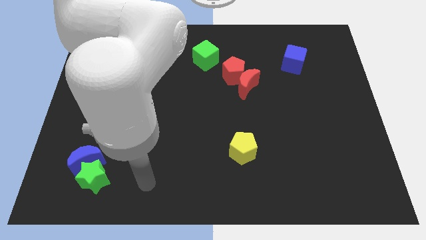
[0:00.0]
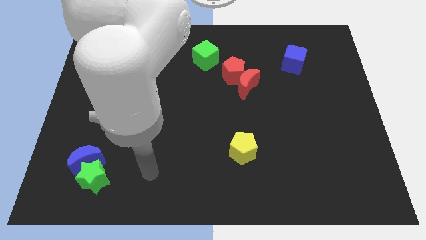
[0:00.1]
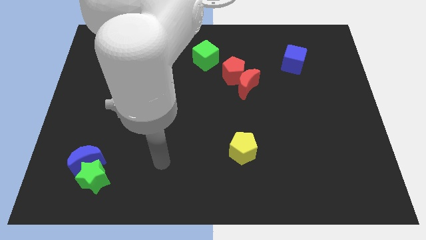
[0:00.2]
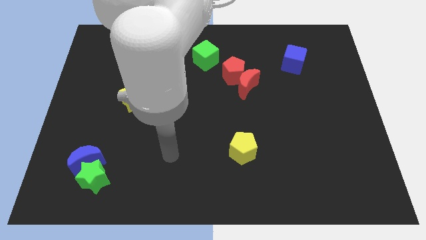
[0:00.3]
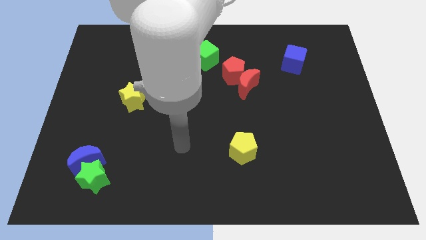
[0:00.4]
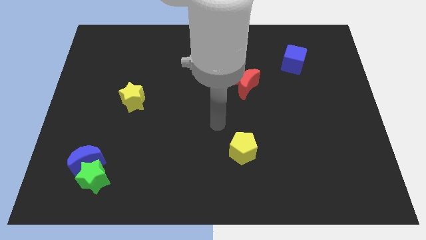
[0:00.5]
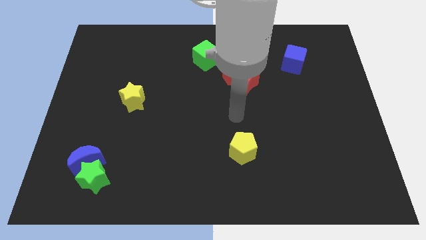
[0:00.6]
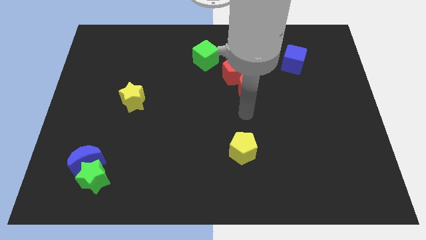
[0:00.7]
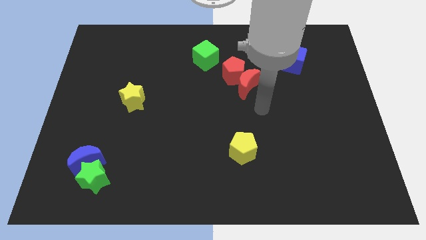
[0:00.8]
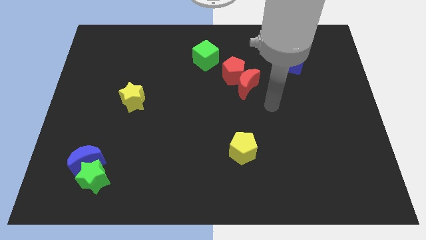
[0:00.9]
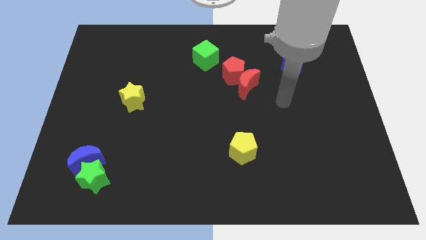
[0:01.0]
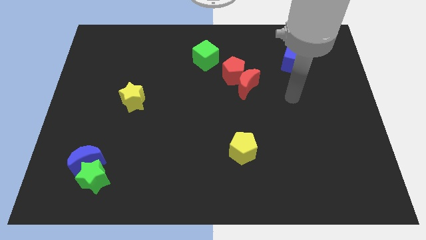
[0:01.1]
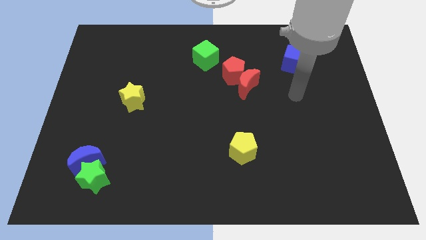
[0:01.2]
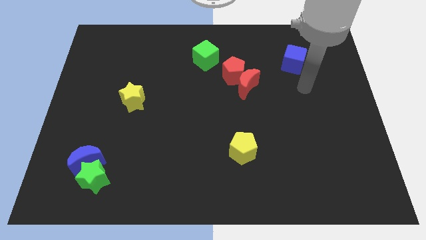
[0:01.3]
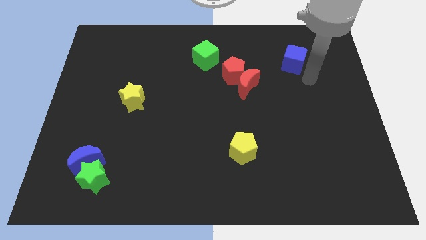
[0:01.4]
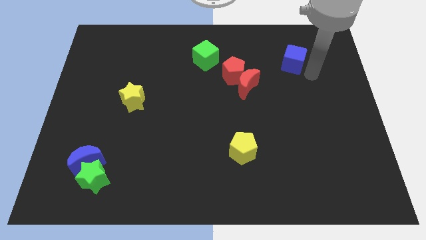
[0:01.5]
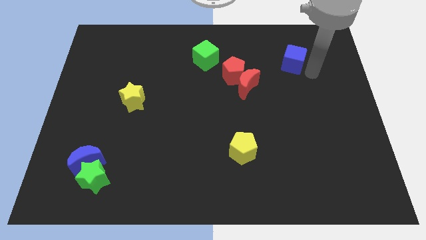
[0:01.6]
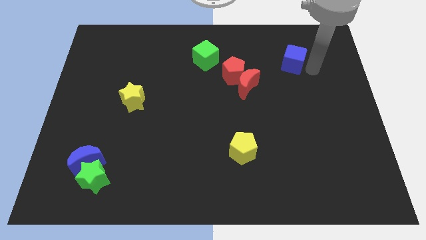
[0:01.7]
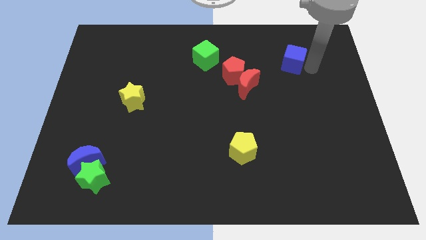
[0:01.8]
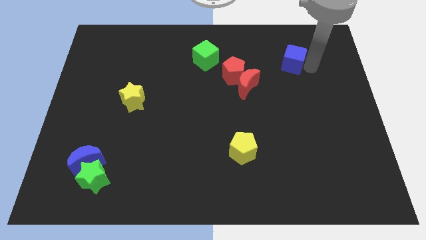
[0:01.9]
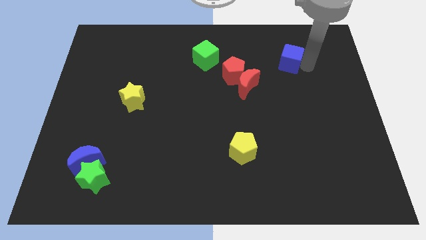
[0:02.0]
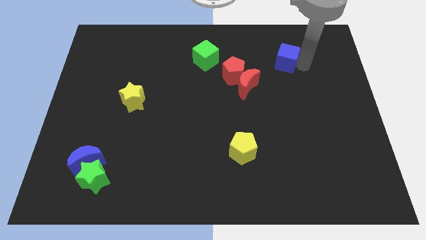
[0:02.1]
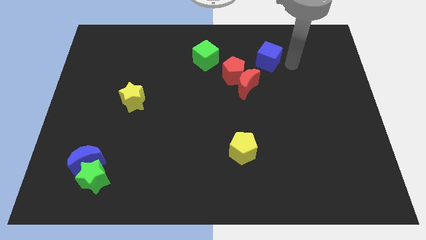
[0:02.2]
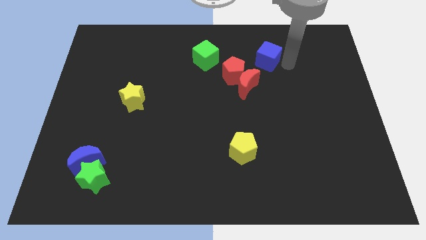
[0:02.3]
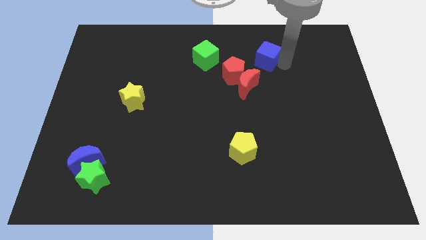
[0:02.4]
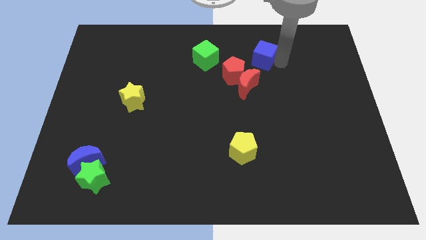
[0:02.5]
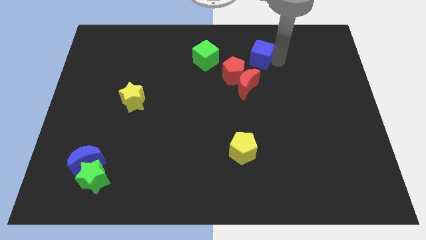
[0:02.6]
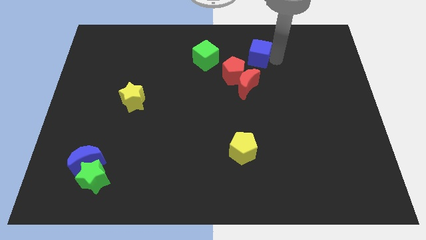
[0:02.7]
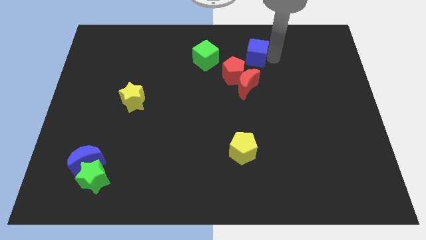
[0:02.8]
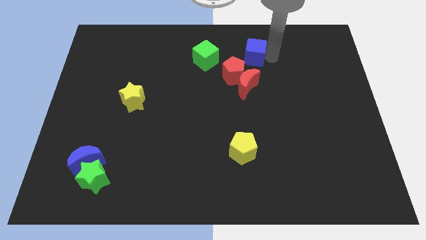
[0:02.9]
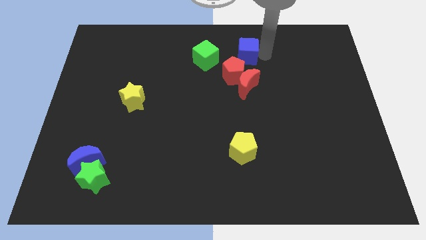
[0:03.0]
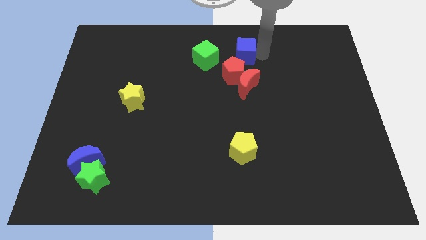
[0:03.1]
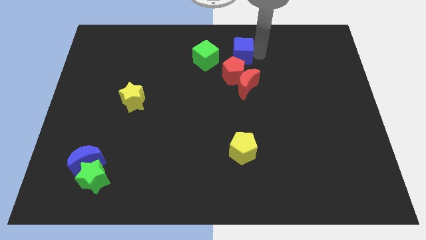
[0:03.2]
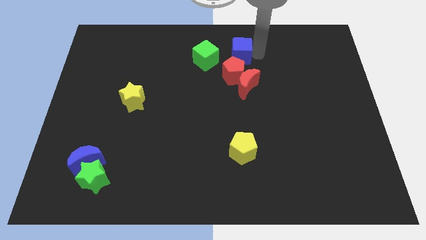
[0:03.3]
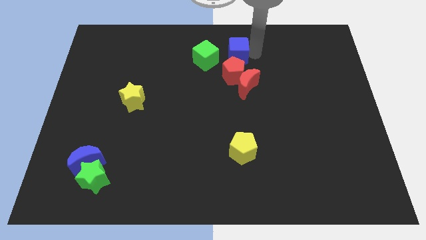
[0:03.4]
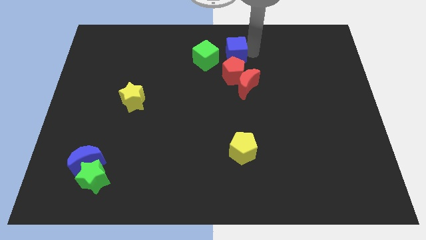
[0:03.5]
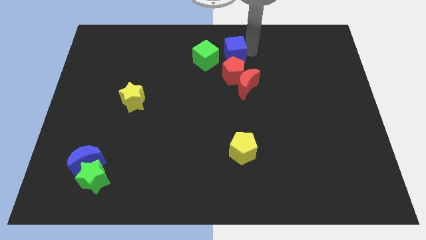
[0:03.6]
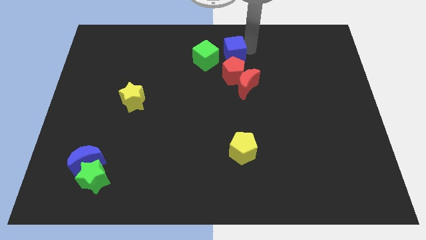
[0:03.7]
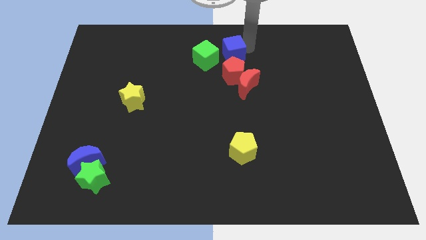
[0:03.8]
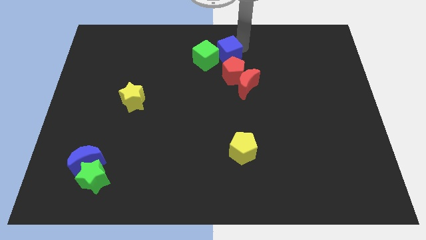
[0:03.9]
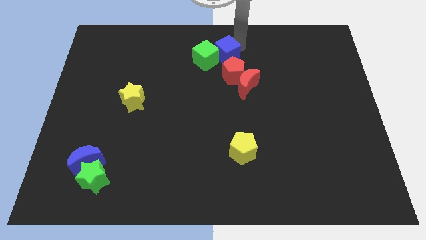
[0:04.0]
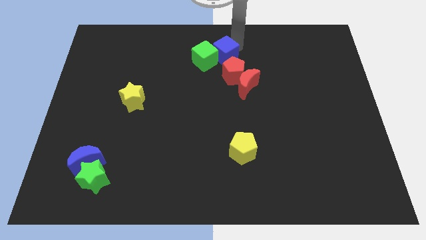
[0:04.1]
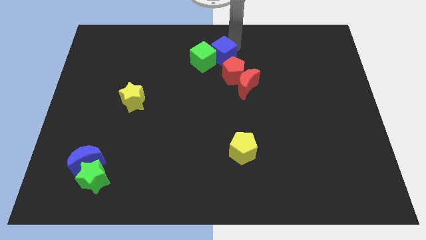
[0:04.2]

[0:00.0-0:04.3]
slide the blue cube next to the green cube

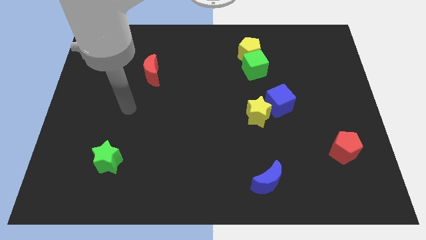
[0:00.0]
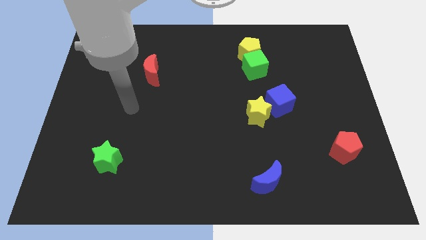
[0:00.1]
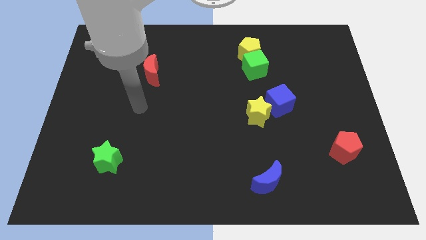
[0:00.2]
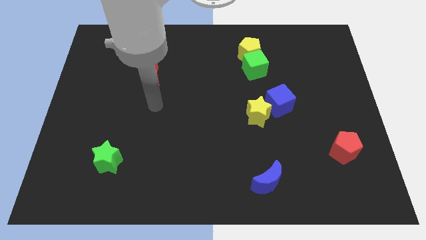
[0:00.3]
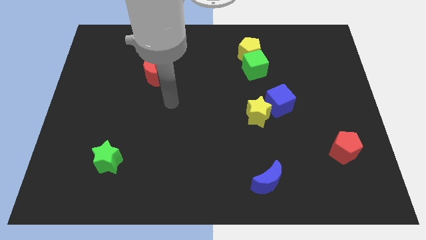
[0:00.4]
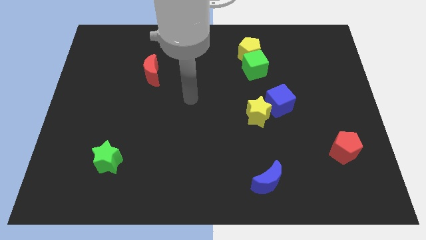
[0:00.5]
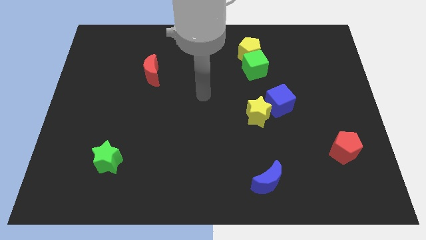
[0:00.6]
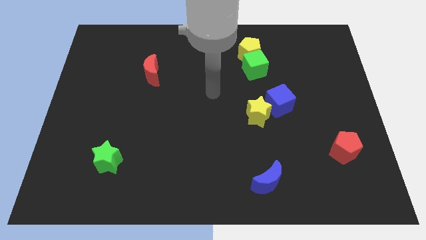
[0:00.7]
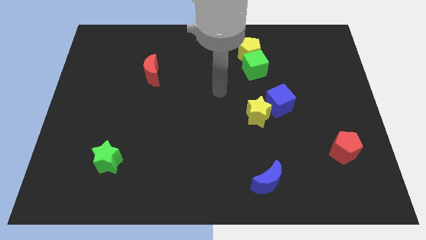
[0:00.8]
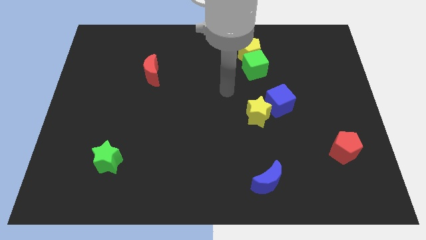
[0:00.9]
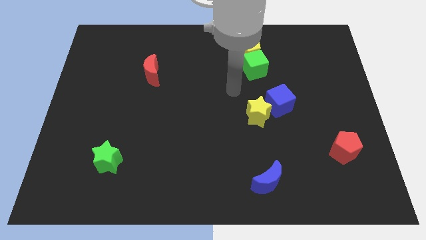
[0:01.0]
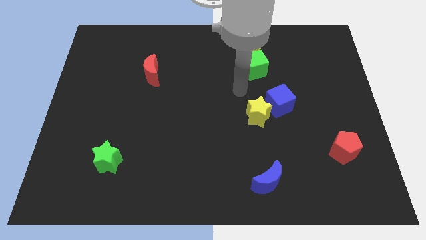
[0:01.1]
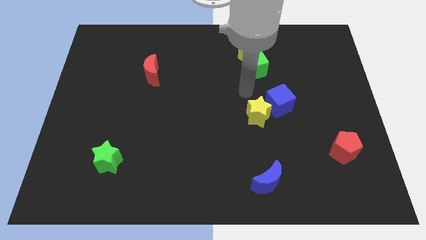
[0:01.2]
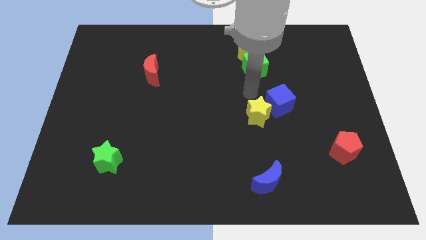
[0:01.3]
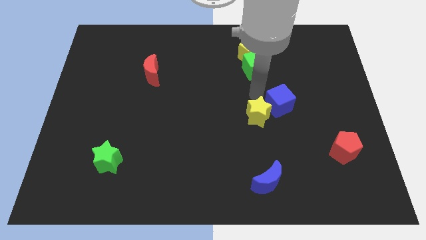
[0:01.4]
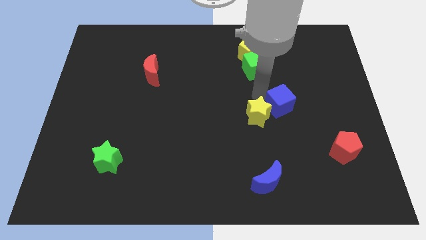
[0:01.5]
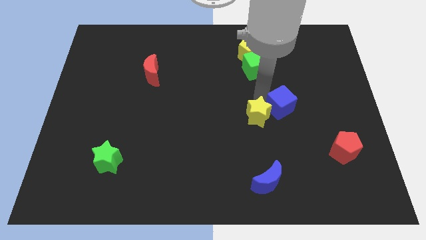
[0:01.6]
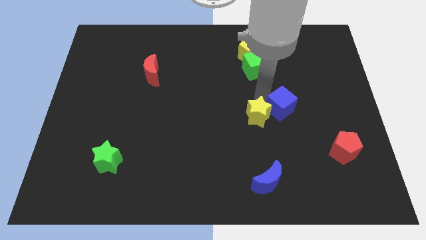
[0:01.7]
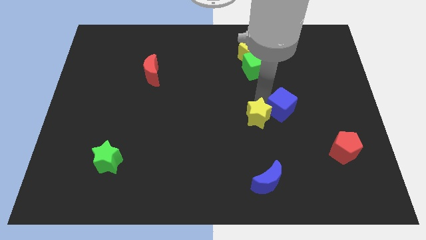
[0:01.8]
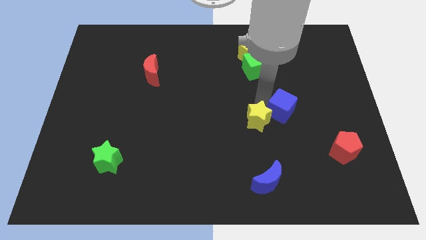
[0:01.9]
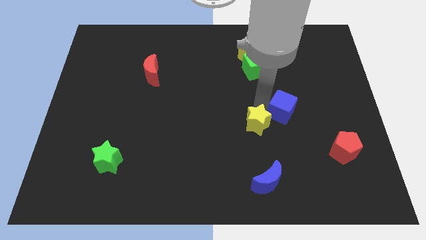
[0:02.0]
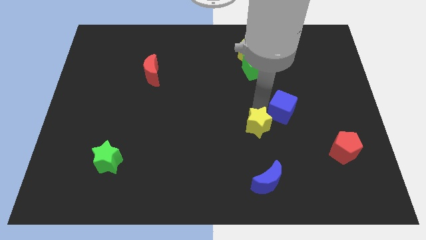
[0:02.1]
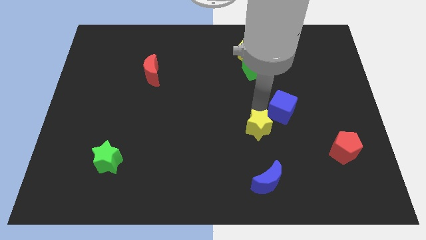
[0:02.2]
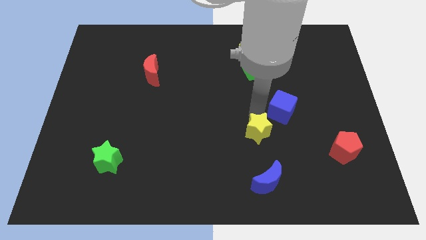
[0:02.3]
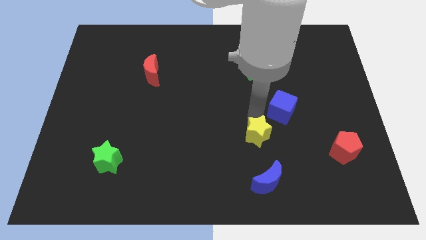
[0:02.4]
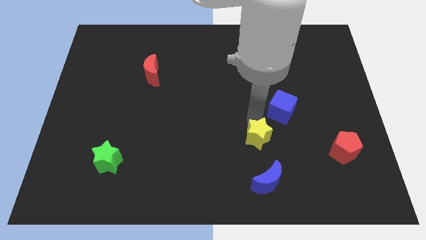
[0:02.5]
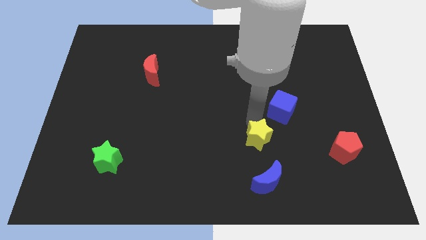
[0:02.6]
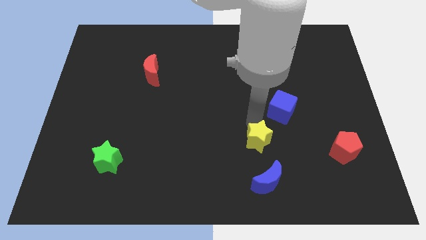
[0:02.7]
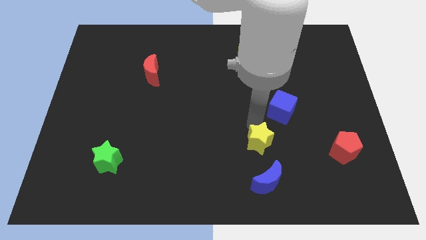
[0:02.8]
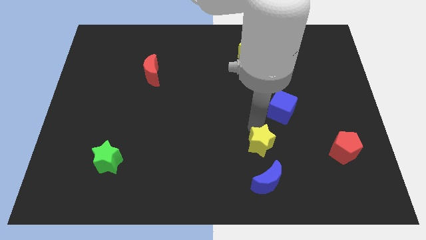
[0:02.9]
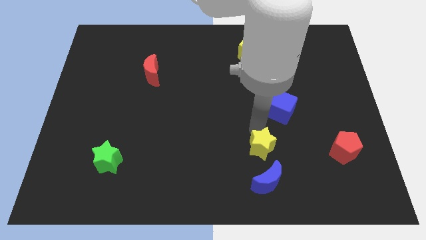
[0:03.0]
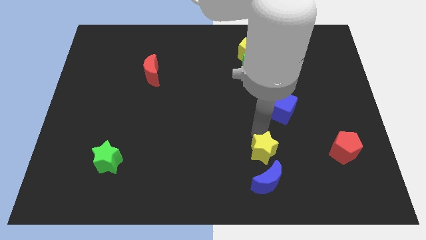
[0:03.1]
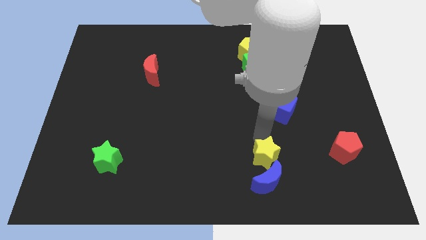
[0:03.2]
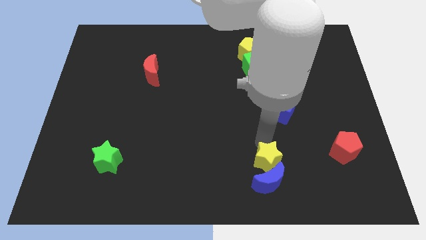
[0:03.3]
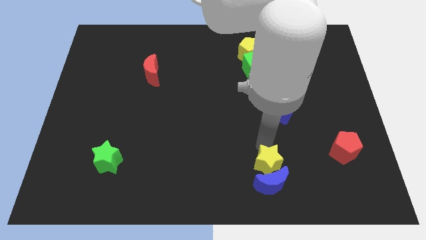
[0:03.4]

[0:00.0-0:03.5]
put the yellow star close to the blue moon
